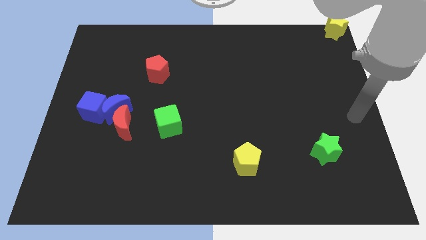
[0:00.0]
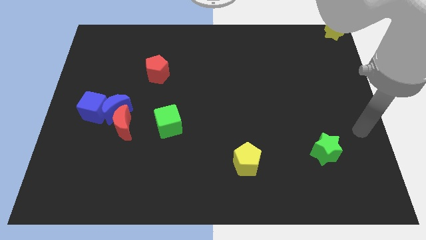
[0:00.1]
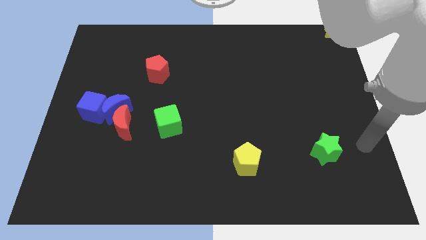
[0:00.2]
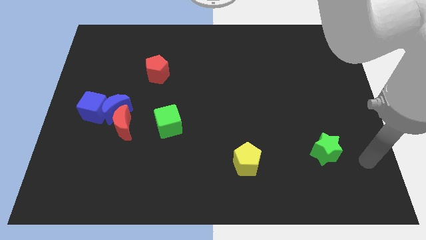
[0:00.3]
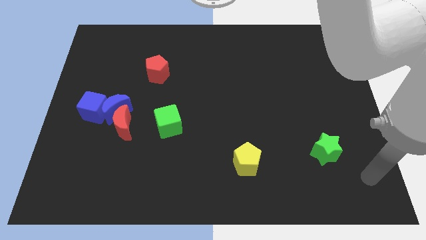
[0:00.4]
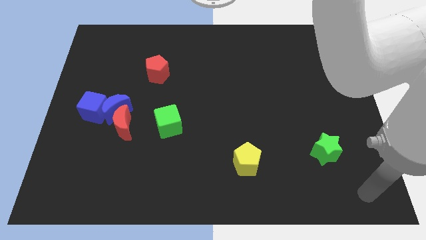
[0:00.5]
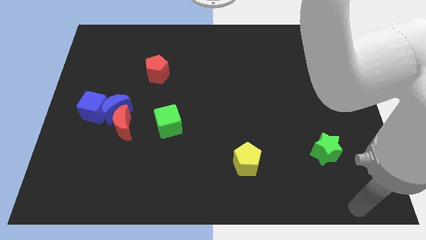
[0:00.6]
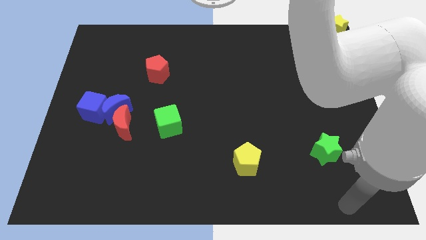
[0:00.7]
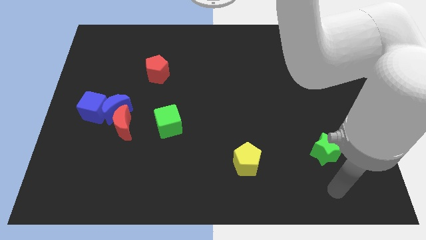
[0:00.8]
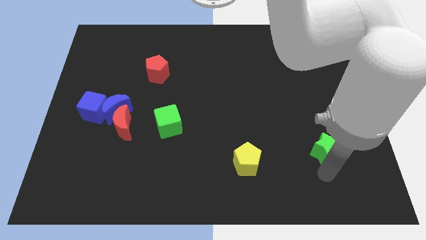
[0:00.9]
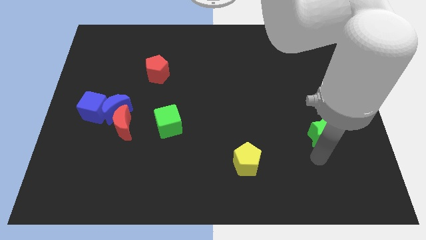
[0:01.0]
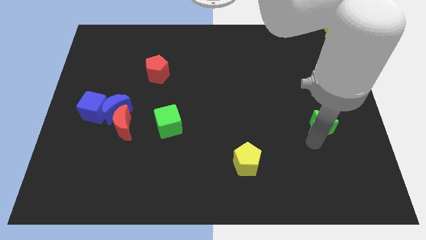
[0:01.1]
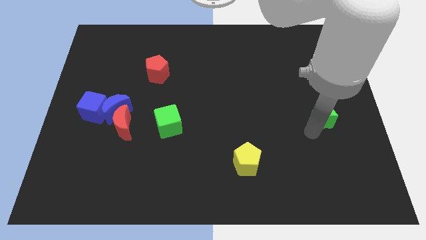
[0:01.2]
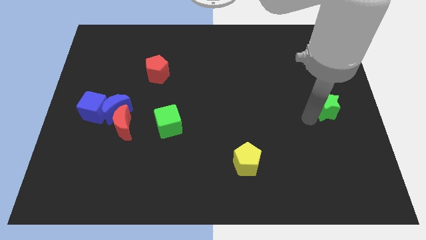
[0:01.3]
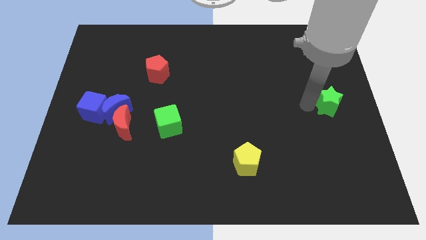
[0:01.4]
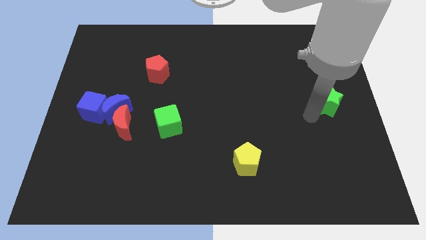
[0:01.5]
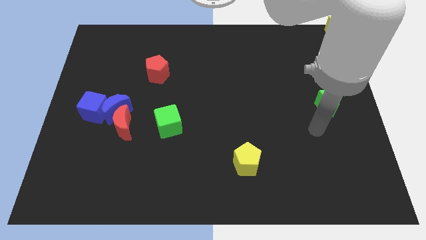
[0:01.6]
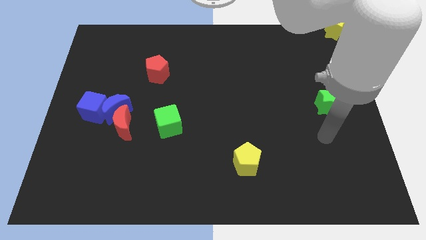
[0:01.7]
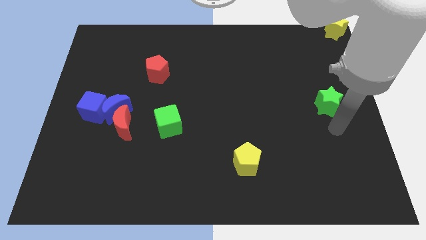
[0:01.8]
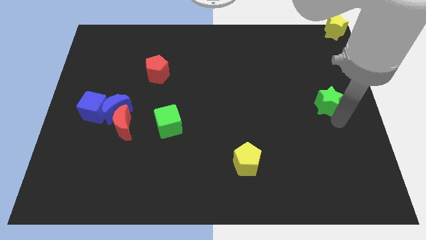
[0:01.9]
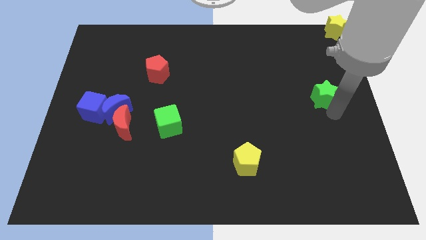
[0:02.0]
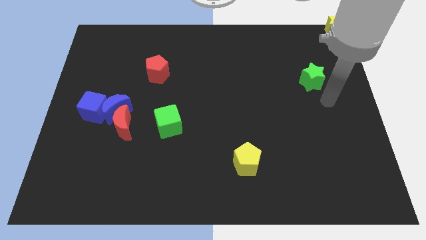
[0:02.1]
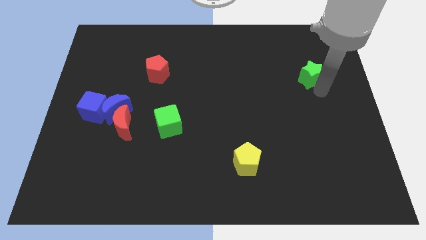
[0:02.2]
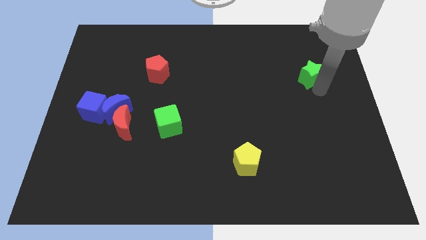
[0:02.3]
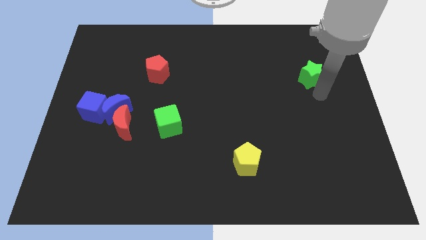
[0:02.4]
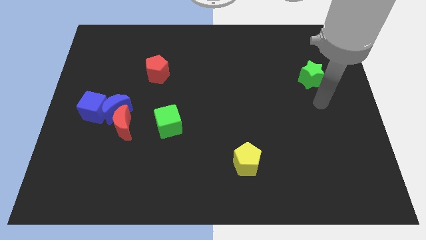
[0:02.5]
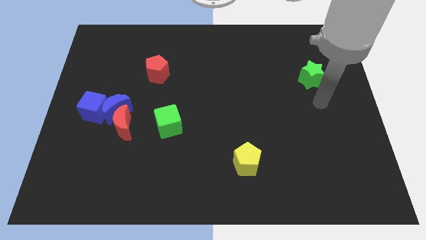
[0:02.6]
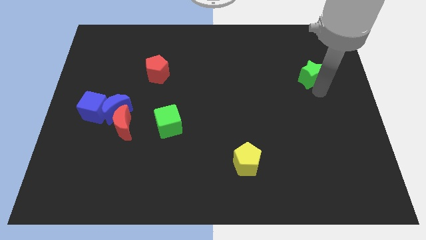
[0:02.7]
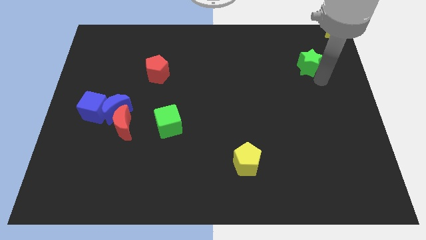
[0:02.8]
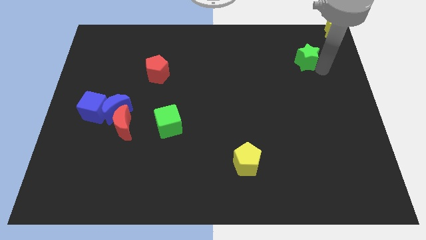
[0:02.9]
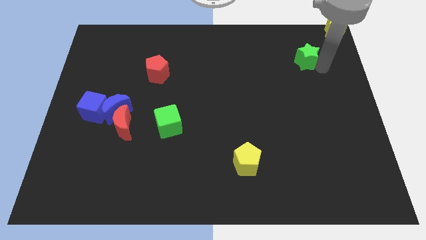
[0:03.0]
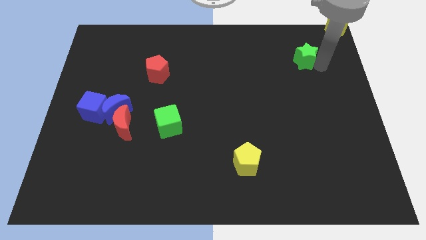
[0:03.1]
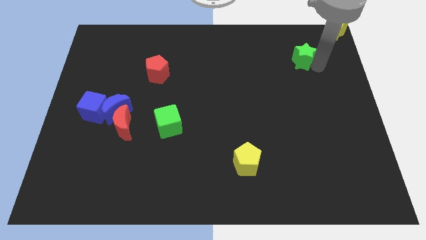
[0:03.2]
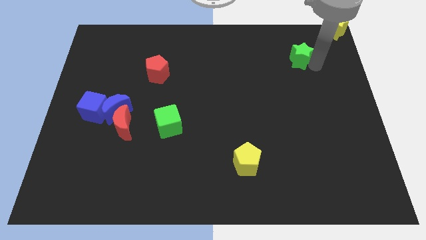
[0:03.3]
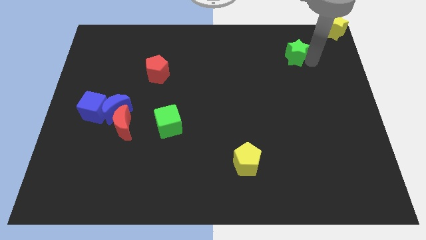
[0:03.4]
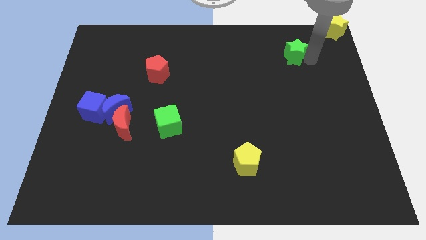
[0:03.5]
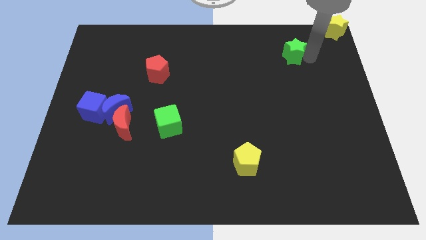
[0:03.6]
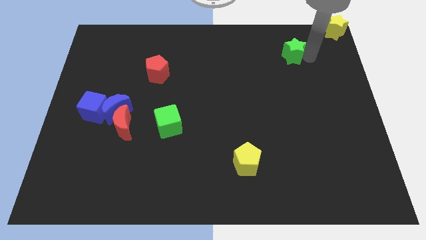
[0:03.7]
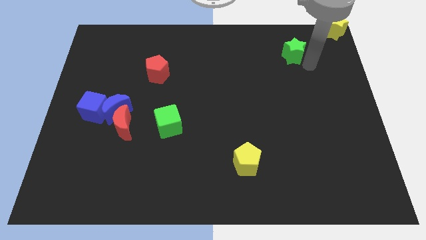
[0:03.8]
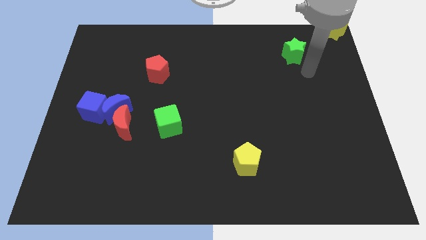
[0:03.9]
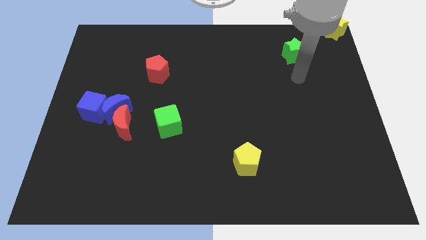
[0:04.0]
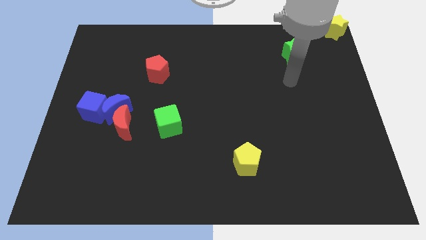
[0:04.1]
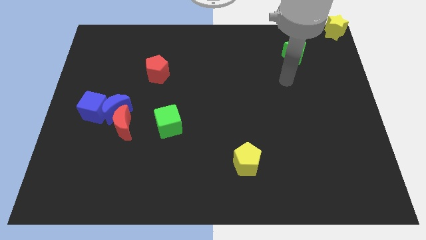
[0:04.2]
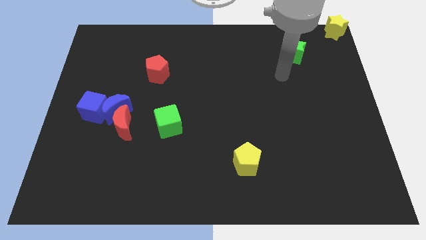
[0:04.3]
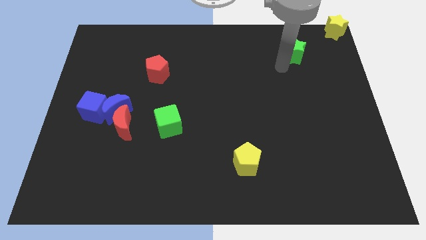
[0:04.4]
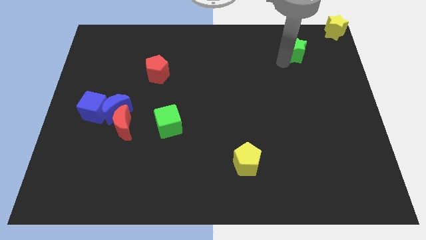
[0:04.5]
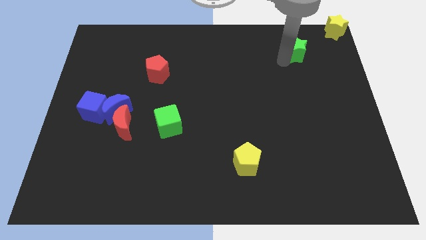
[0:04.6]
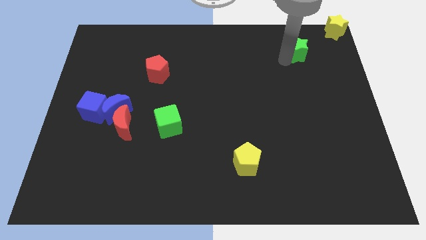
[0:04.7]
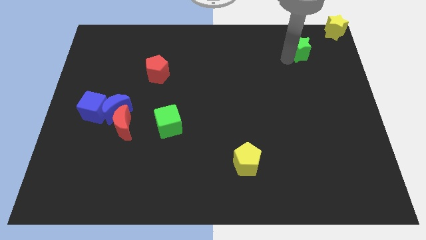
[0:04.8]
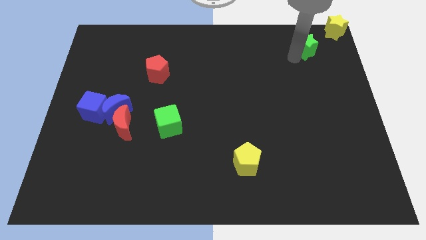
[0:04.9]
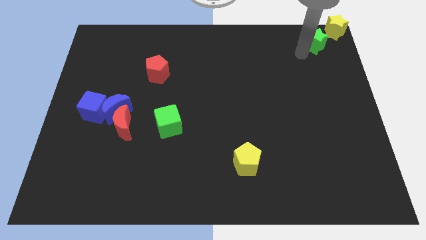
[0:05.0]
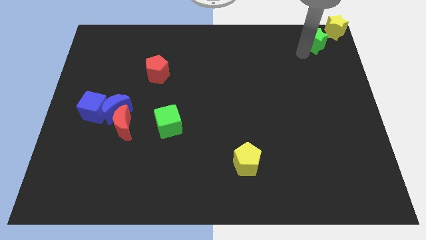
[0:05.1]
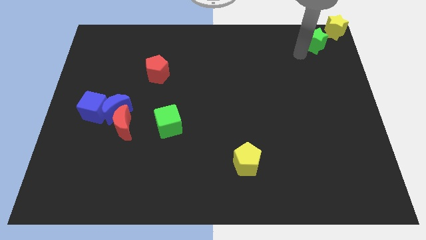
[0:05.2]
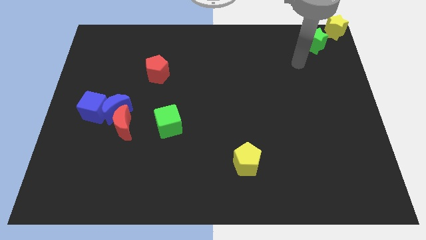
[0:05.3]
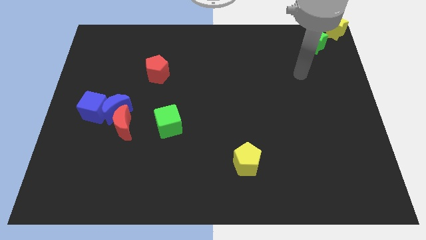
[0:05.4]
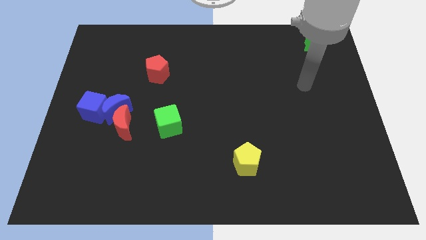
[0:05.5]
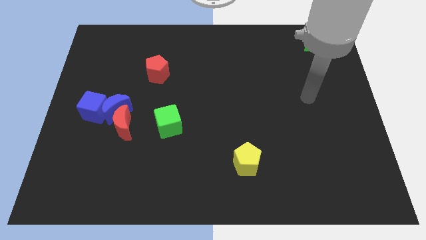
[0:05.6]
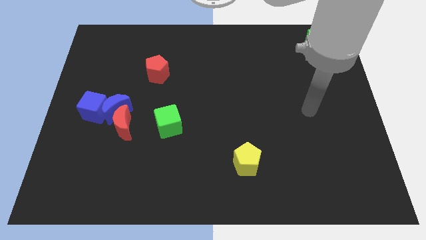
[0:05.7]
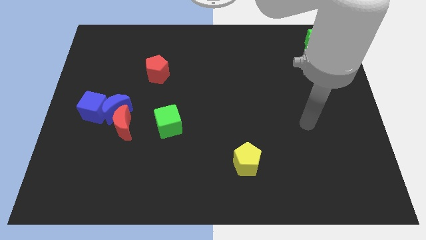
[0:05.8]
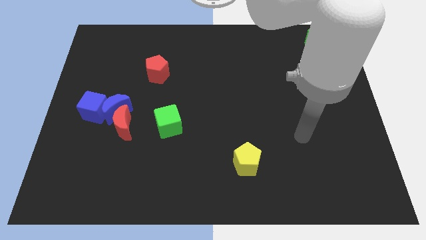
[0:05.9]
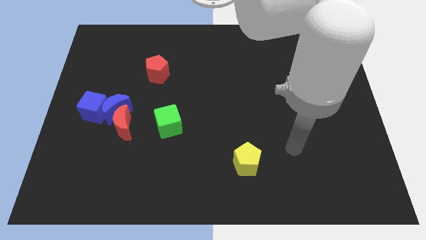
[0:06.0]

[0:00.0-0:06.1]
move the green star to the bottom side of the yellow star

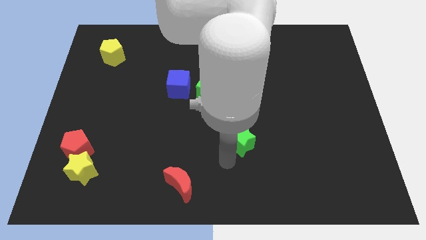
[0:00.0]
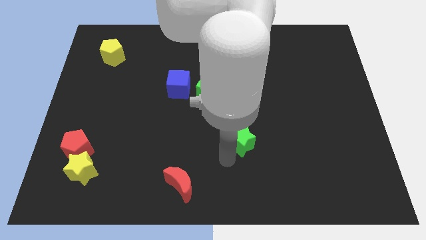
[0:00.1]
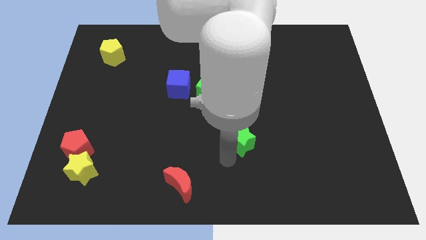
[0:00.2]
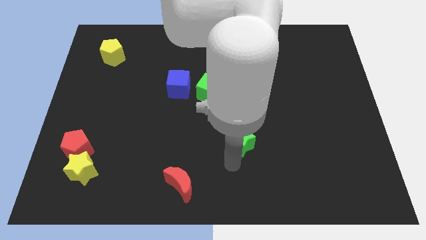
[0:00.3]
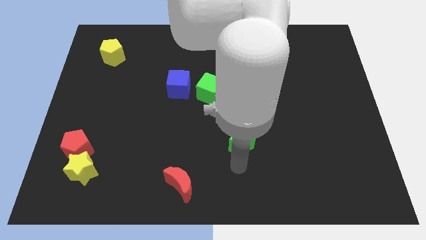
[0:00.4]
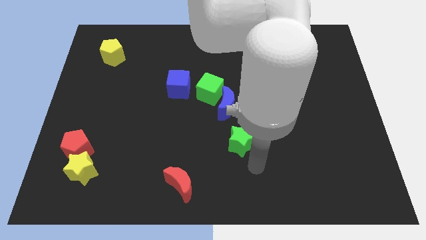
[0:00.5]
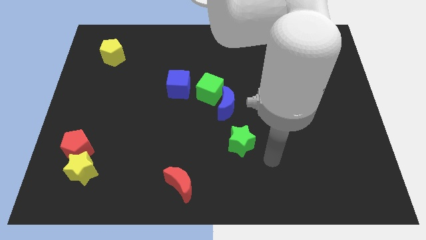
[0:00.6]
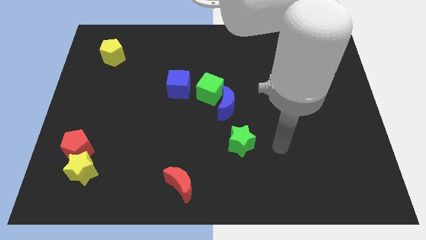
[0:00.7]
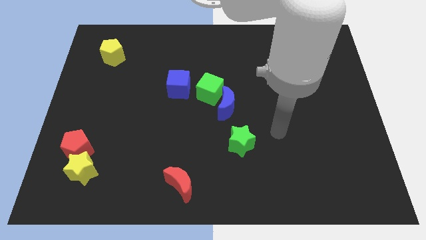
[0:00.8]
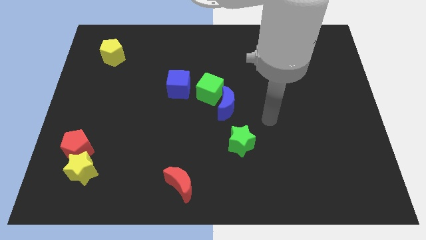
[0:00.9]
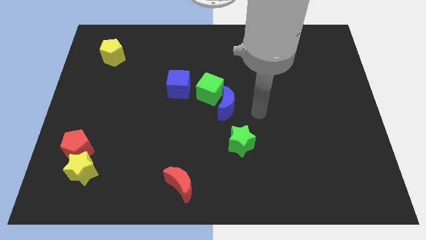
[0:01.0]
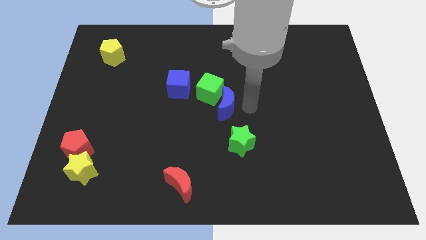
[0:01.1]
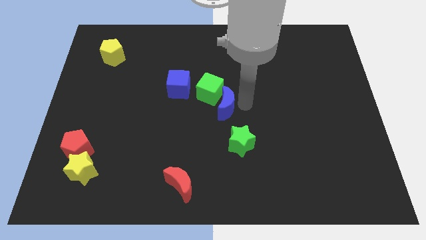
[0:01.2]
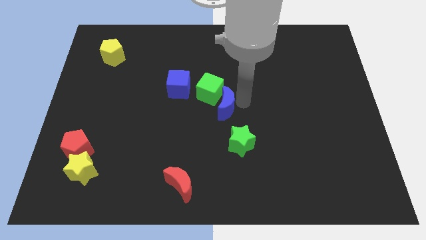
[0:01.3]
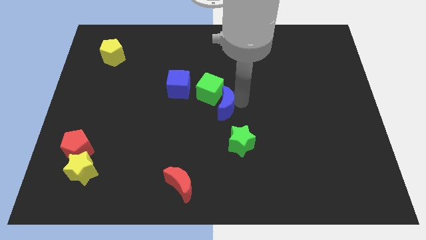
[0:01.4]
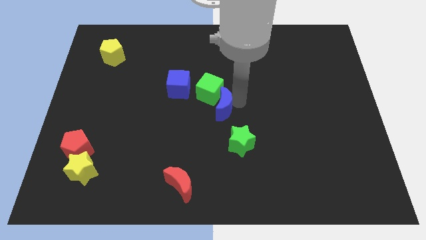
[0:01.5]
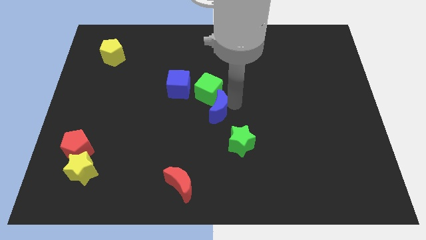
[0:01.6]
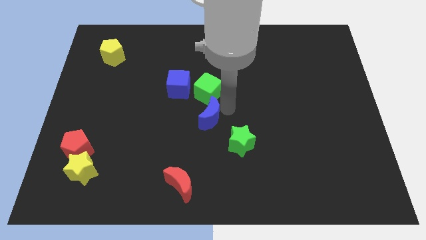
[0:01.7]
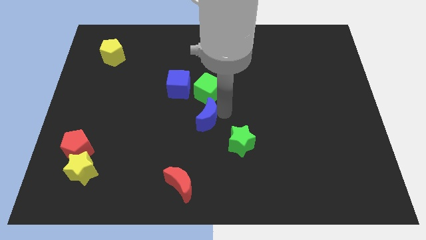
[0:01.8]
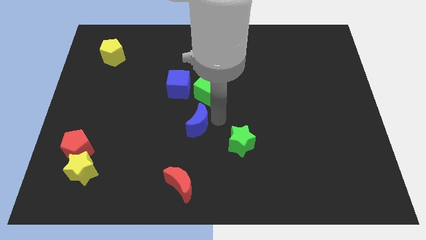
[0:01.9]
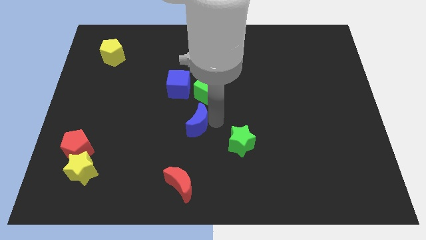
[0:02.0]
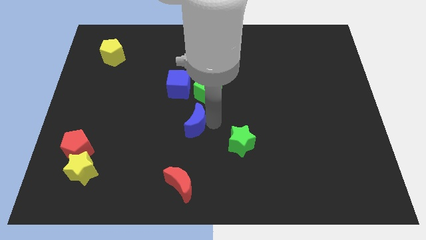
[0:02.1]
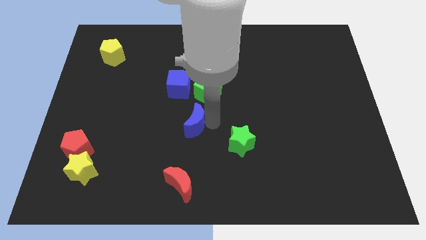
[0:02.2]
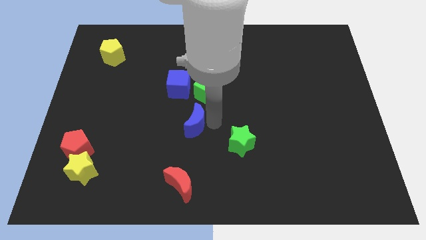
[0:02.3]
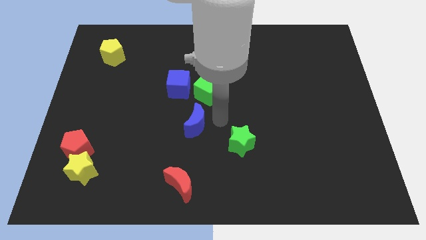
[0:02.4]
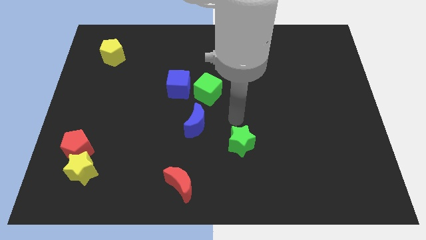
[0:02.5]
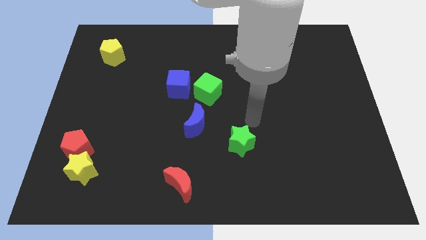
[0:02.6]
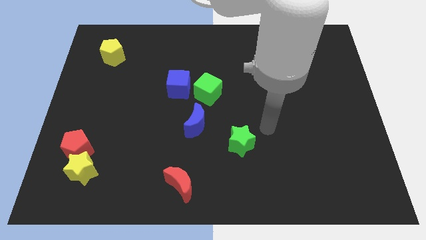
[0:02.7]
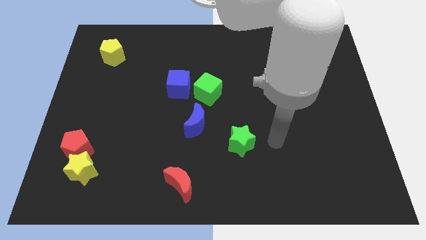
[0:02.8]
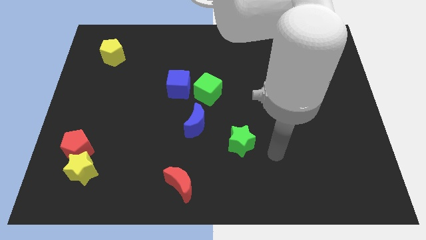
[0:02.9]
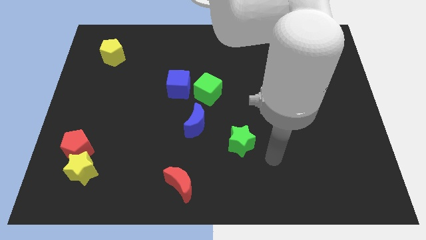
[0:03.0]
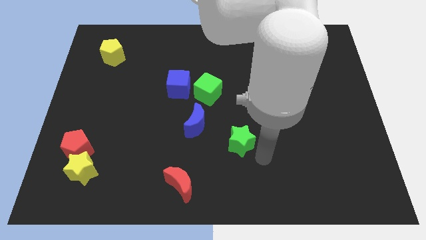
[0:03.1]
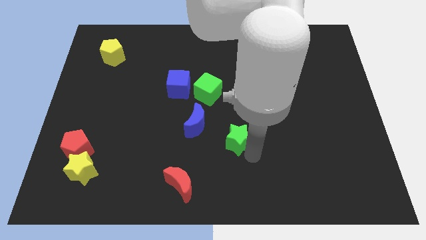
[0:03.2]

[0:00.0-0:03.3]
move the blue crescent to the bottom of the green cube
